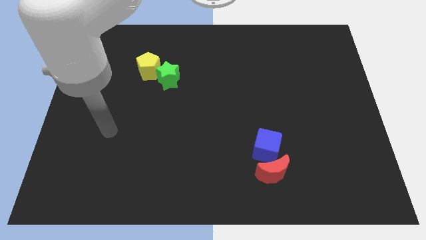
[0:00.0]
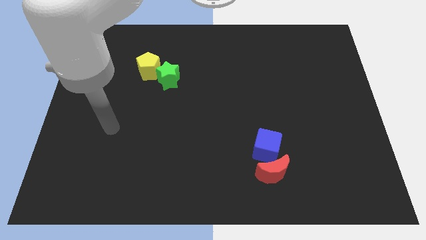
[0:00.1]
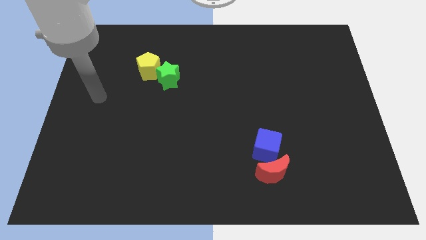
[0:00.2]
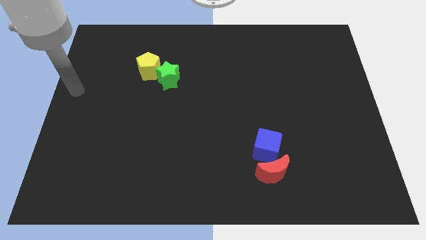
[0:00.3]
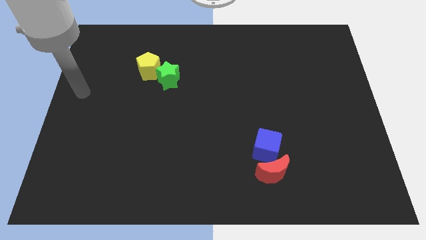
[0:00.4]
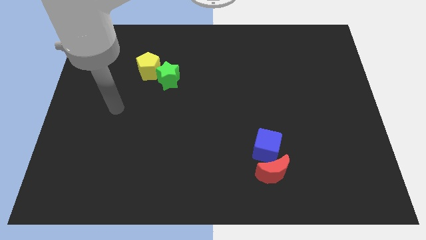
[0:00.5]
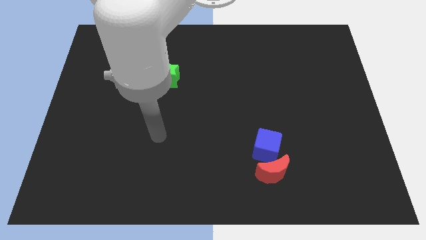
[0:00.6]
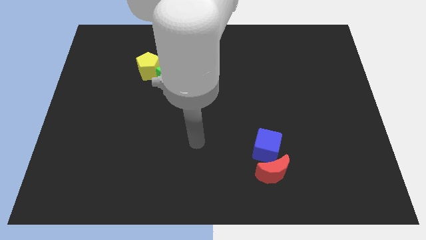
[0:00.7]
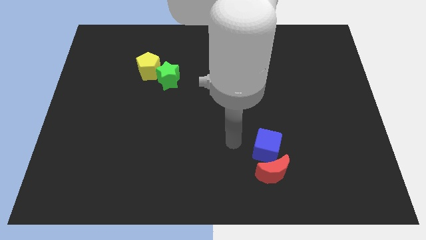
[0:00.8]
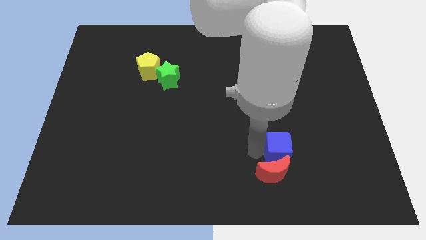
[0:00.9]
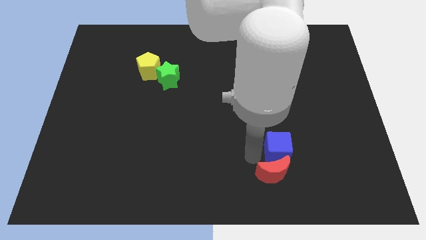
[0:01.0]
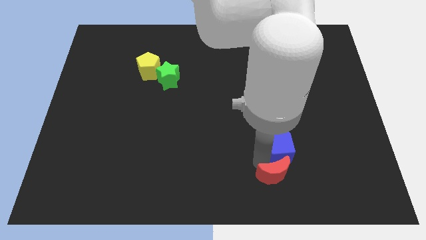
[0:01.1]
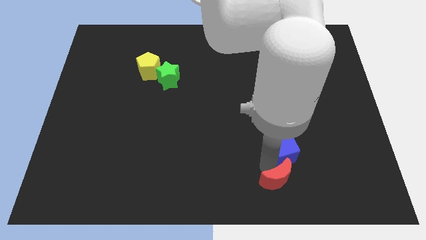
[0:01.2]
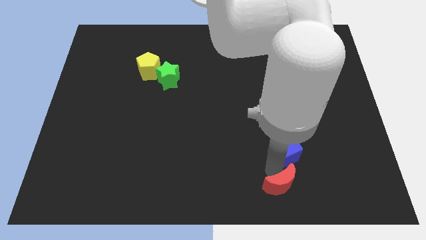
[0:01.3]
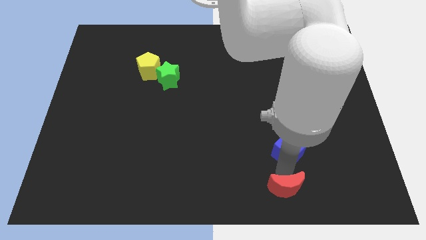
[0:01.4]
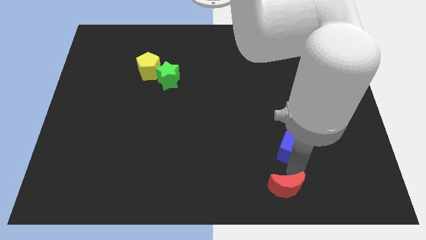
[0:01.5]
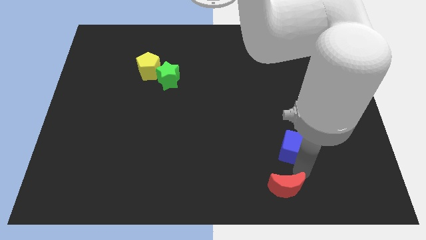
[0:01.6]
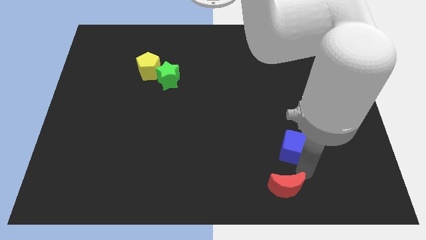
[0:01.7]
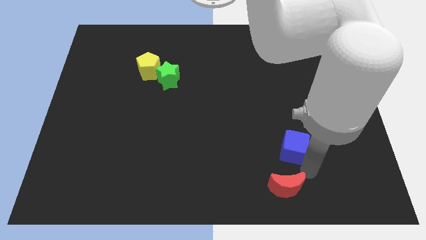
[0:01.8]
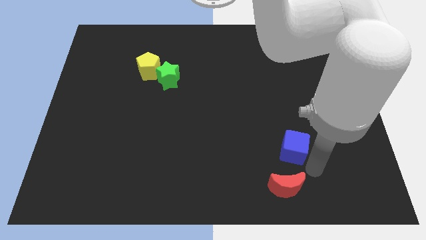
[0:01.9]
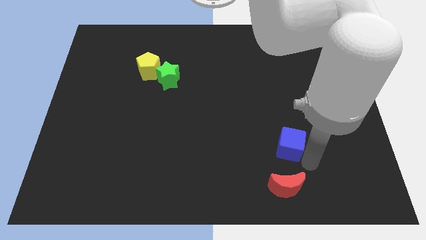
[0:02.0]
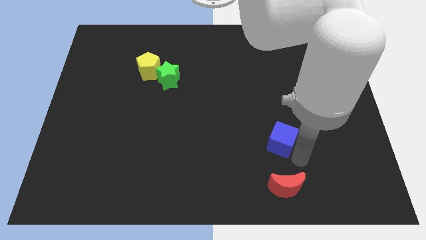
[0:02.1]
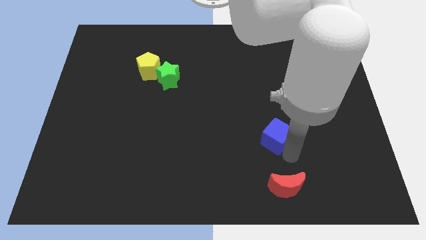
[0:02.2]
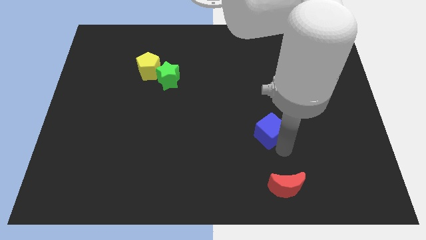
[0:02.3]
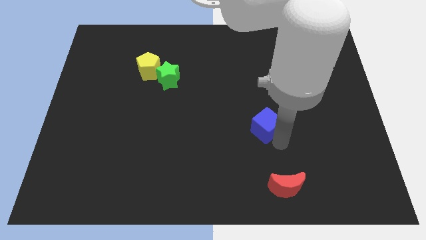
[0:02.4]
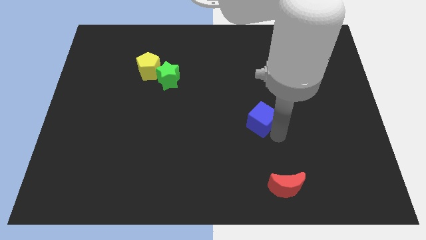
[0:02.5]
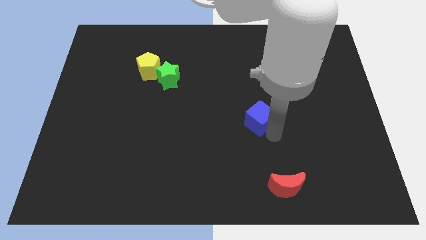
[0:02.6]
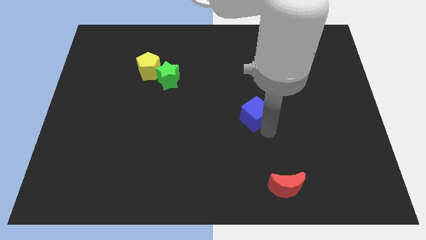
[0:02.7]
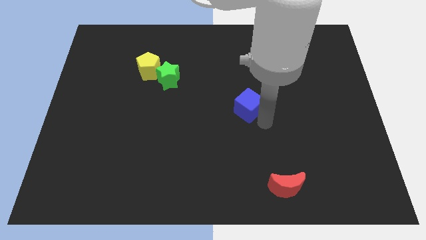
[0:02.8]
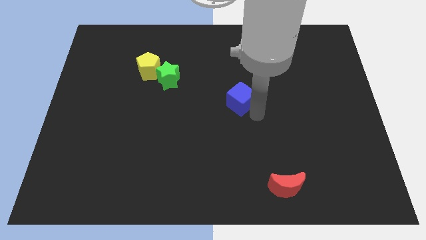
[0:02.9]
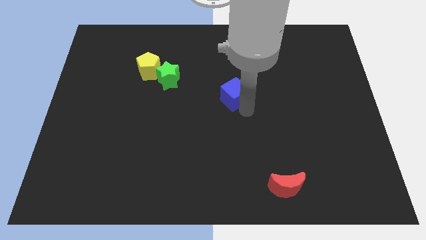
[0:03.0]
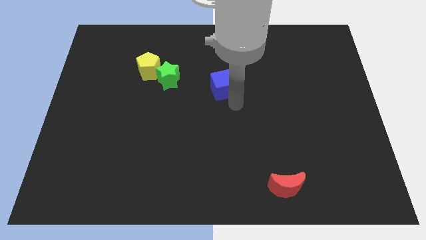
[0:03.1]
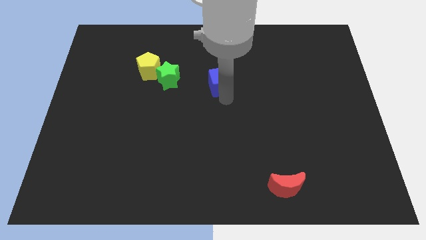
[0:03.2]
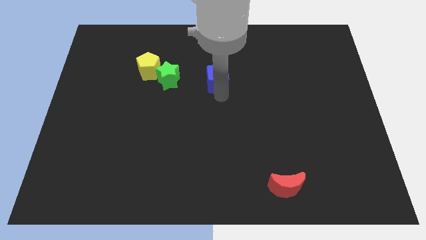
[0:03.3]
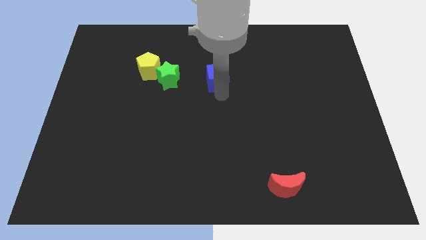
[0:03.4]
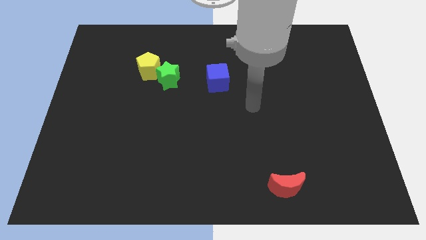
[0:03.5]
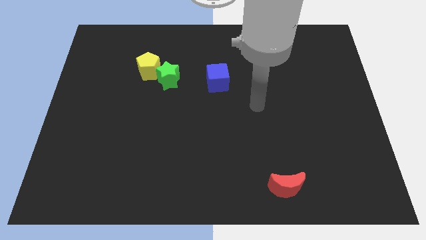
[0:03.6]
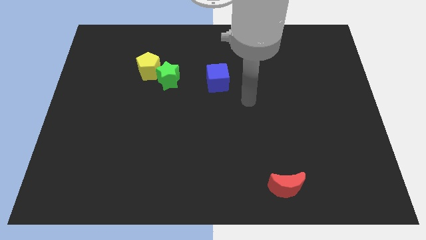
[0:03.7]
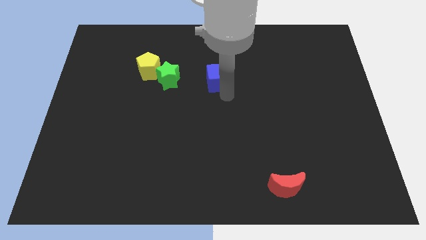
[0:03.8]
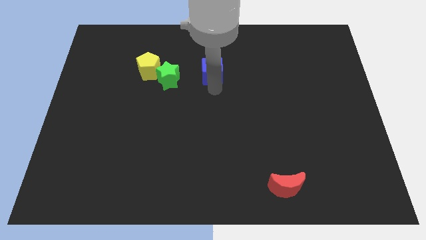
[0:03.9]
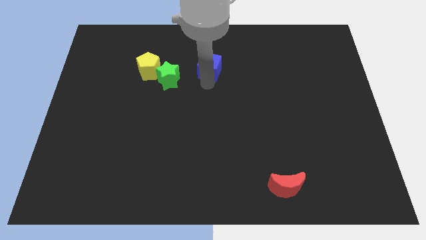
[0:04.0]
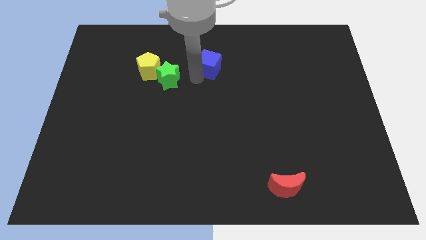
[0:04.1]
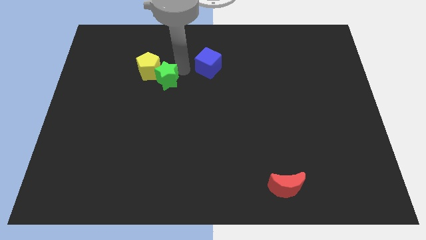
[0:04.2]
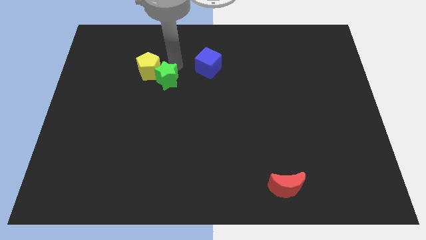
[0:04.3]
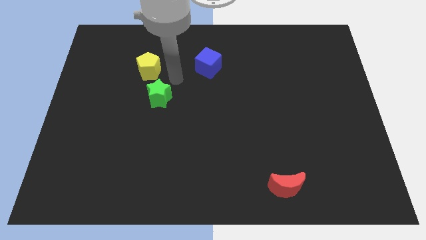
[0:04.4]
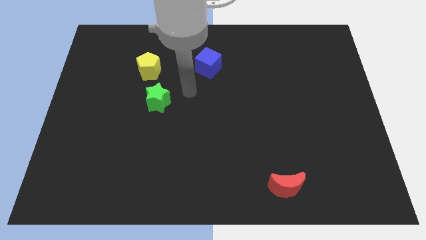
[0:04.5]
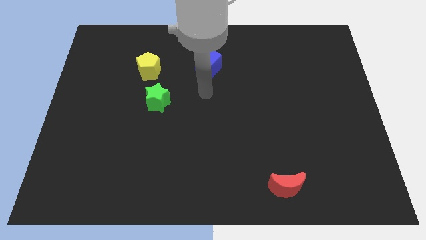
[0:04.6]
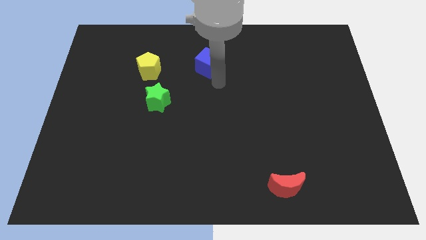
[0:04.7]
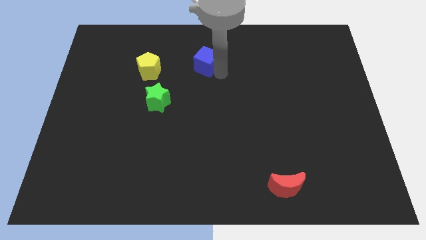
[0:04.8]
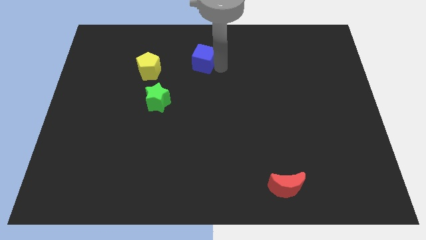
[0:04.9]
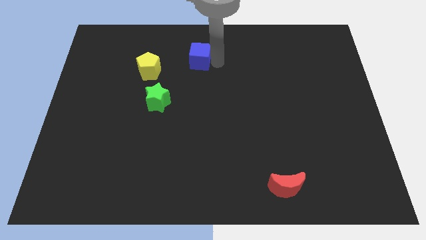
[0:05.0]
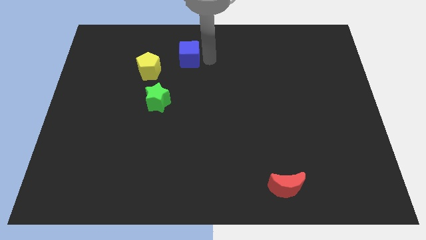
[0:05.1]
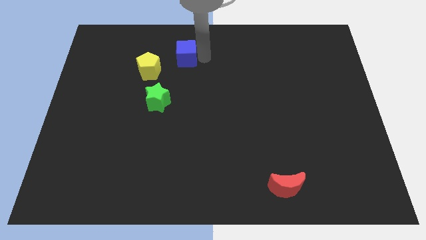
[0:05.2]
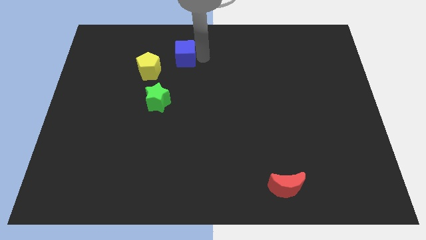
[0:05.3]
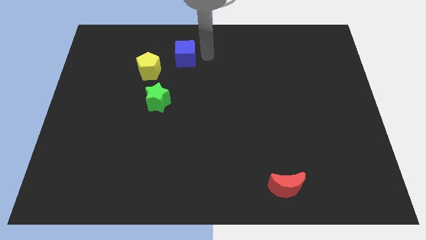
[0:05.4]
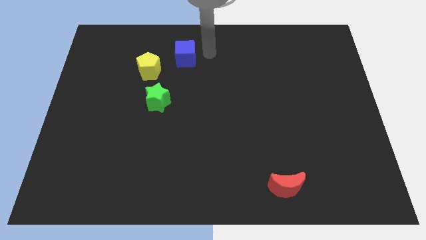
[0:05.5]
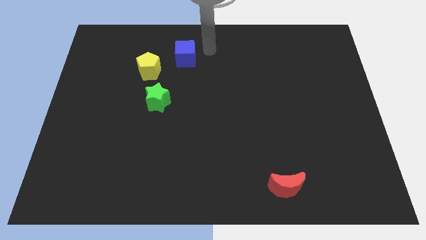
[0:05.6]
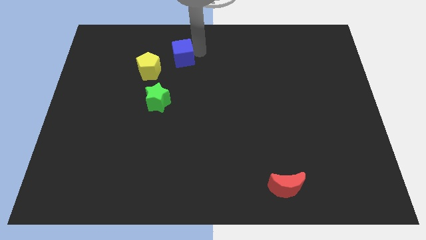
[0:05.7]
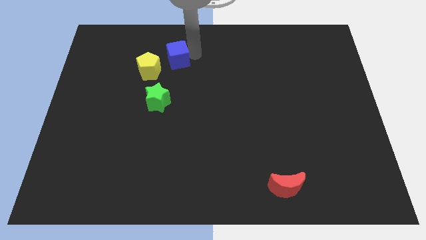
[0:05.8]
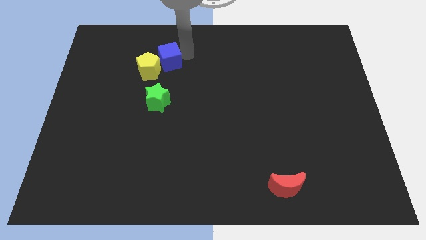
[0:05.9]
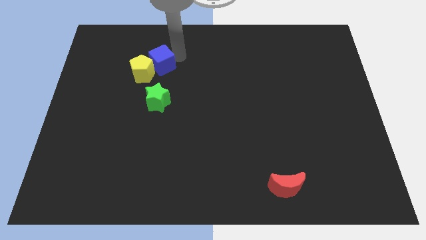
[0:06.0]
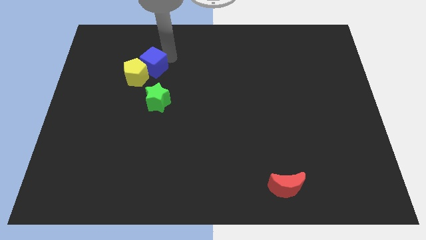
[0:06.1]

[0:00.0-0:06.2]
put the blue block towards the yellow pentagon

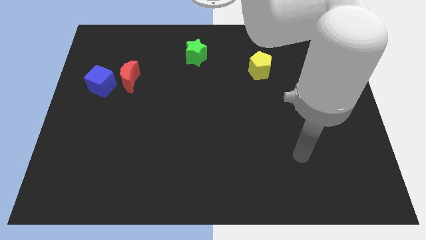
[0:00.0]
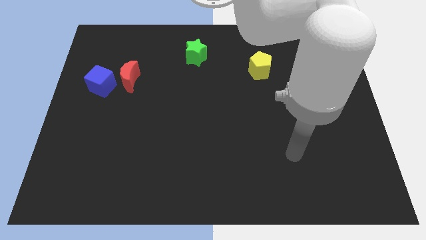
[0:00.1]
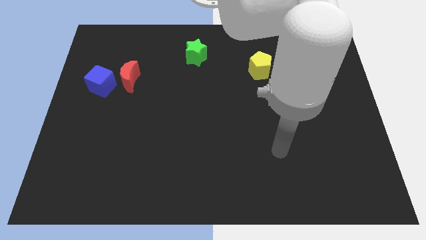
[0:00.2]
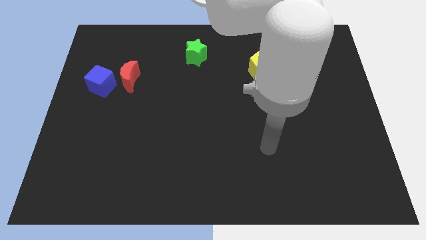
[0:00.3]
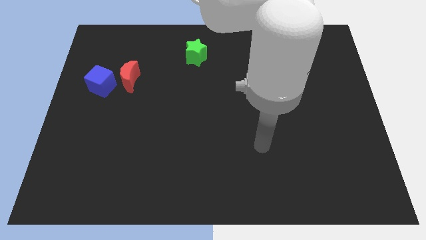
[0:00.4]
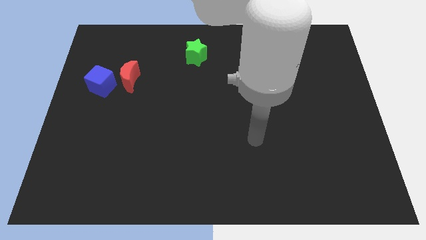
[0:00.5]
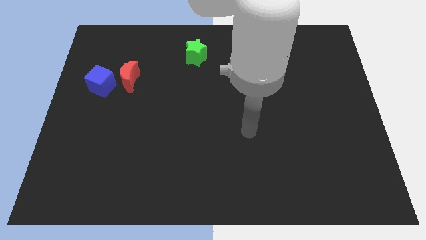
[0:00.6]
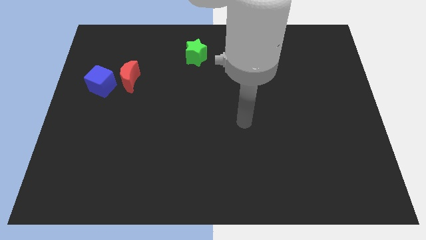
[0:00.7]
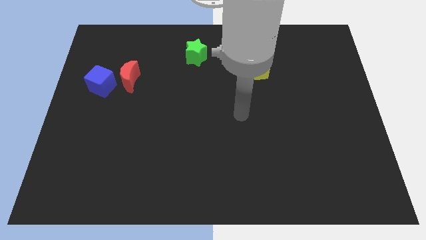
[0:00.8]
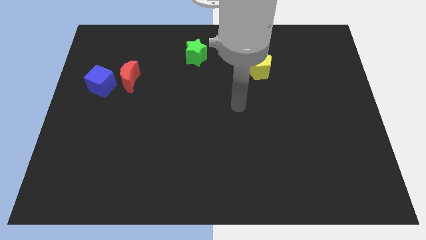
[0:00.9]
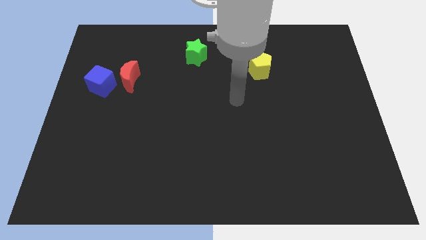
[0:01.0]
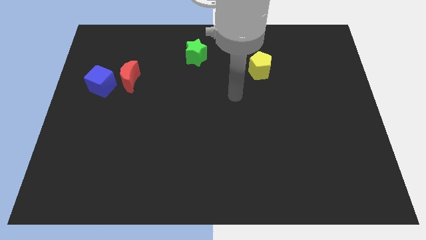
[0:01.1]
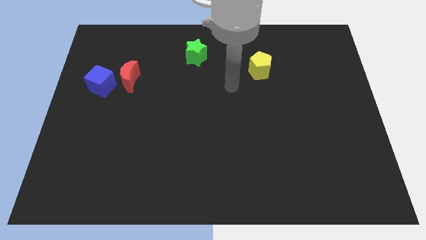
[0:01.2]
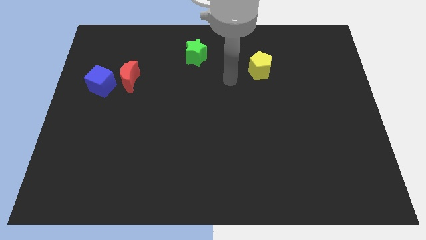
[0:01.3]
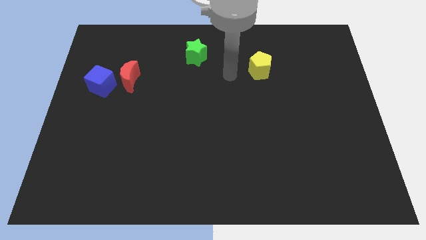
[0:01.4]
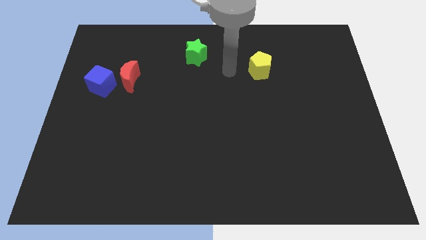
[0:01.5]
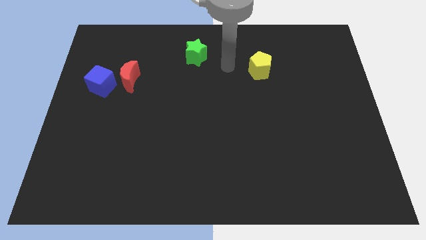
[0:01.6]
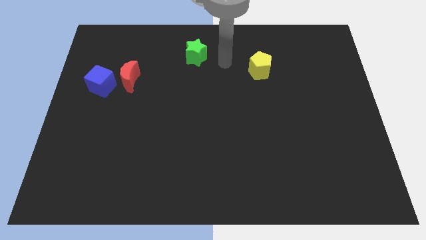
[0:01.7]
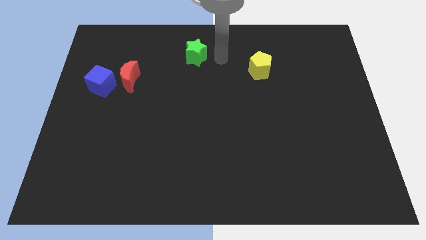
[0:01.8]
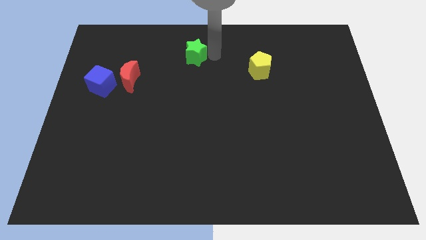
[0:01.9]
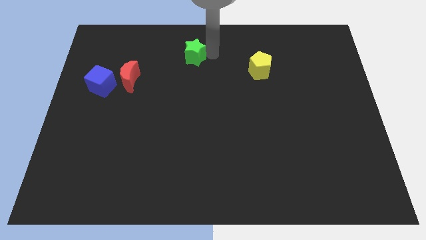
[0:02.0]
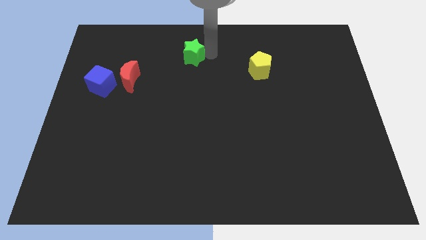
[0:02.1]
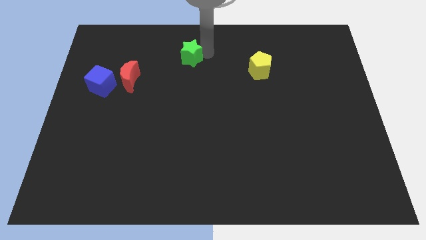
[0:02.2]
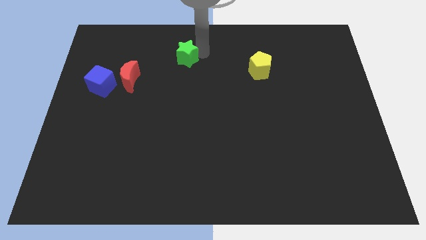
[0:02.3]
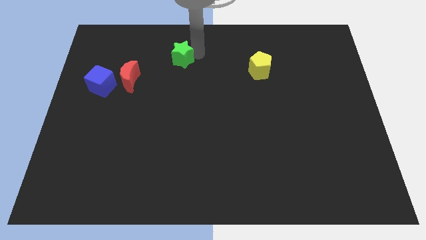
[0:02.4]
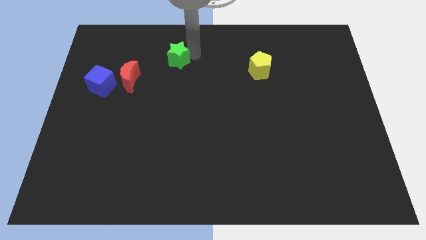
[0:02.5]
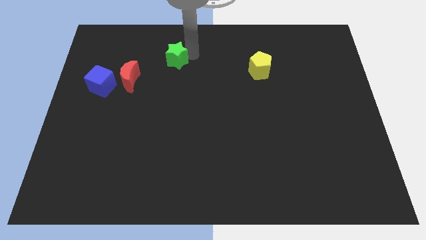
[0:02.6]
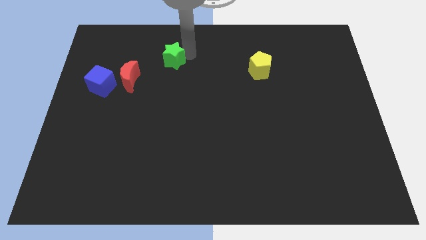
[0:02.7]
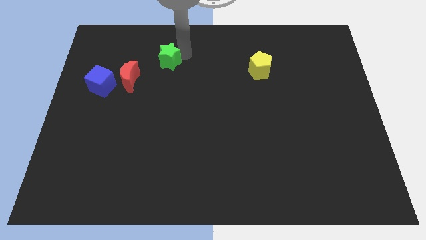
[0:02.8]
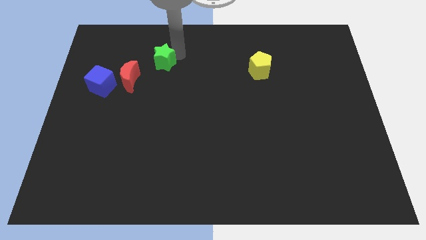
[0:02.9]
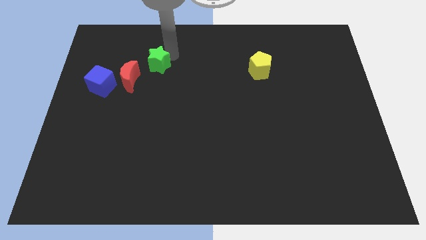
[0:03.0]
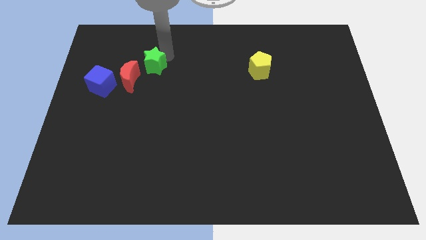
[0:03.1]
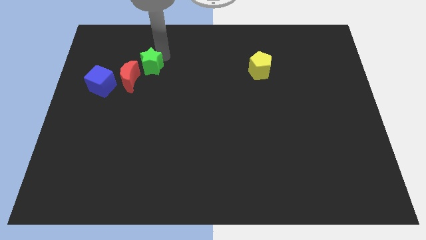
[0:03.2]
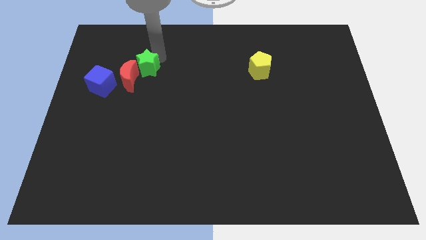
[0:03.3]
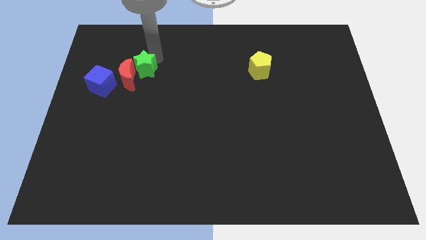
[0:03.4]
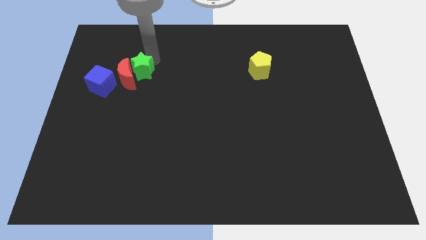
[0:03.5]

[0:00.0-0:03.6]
put the green star close to the red block
